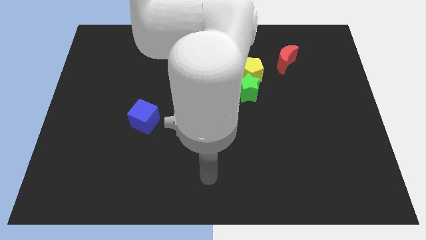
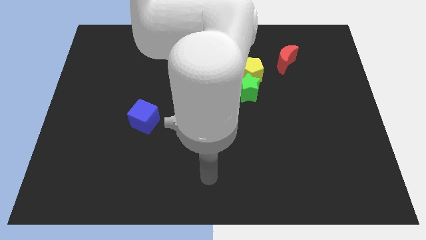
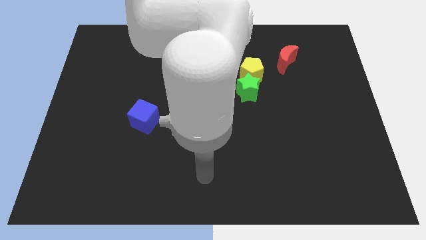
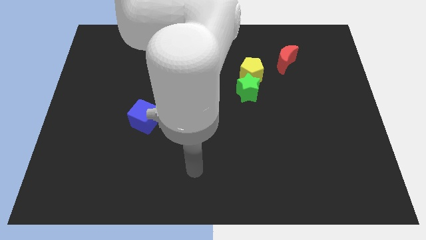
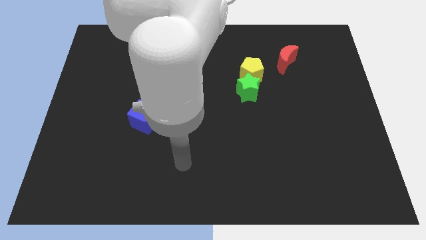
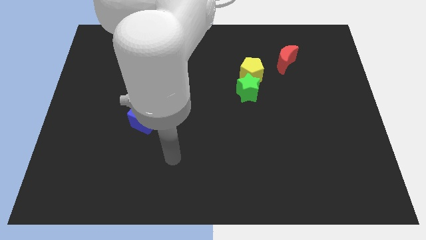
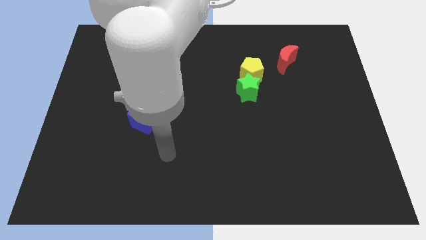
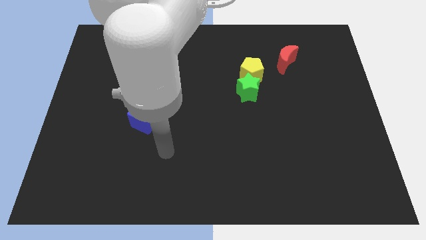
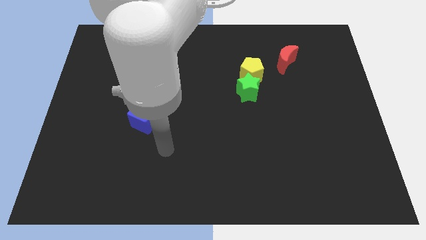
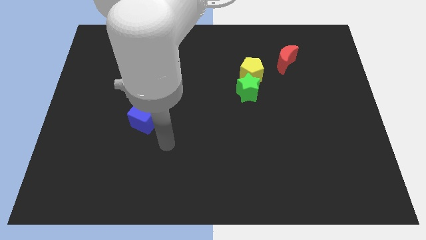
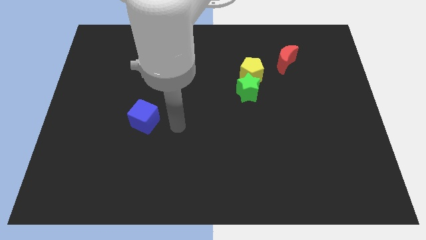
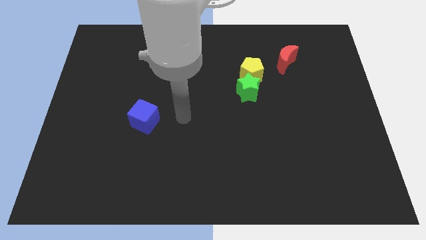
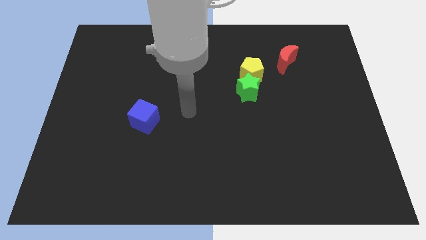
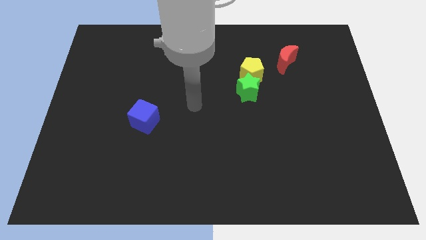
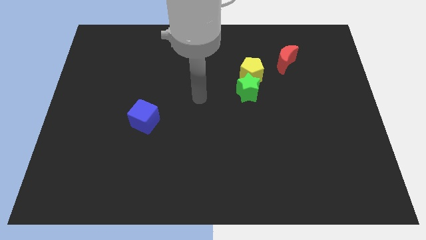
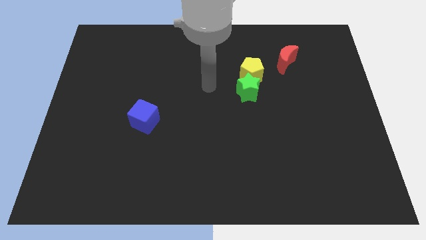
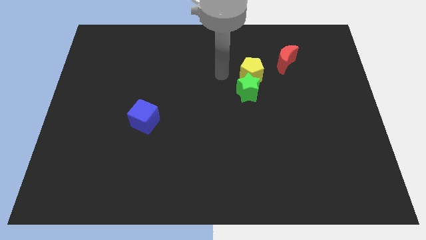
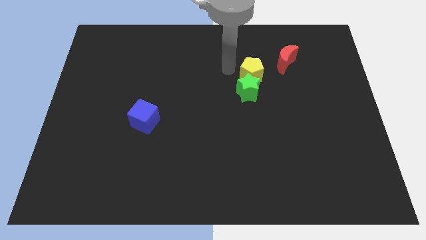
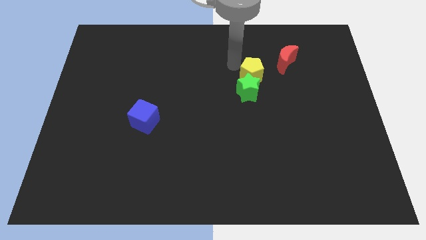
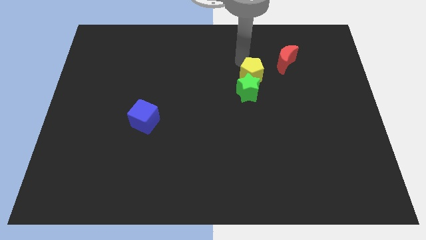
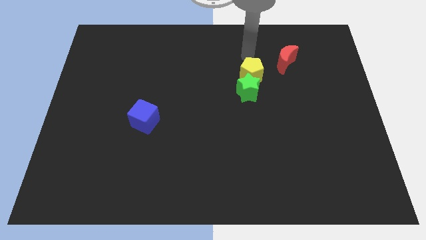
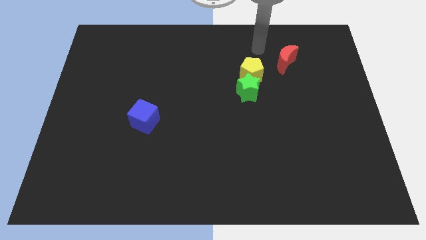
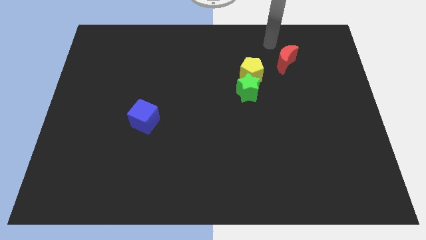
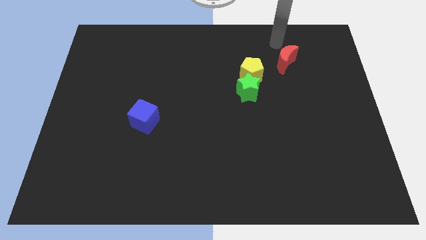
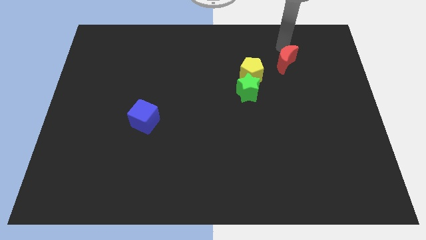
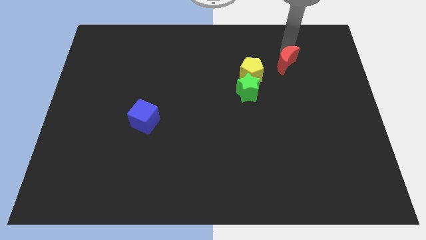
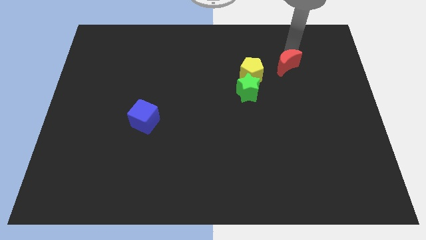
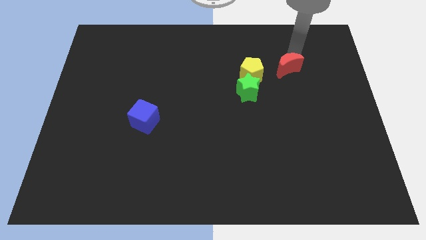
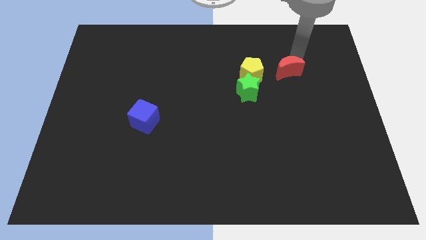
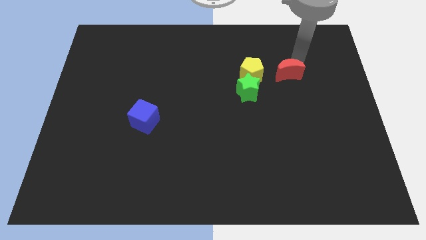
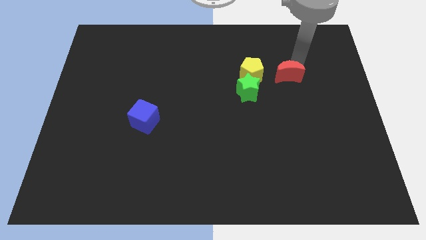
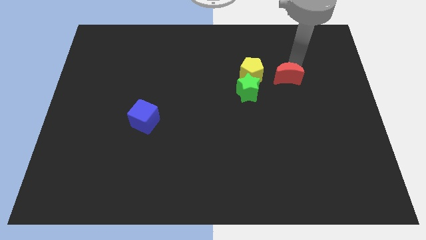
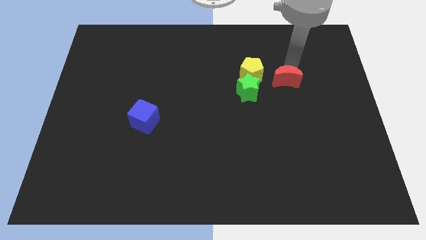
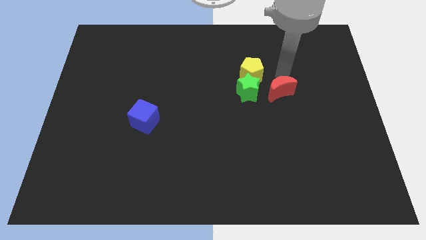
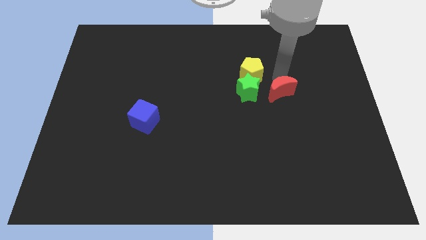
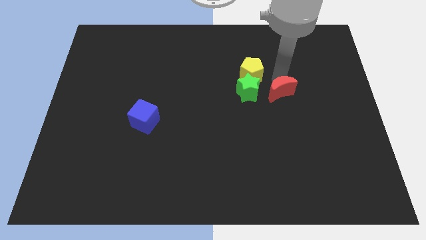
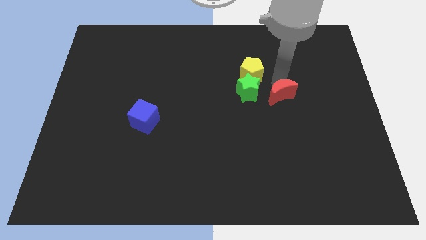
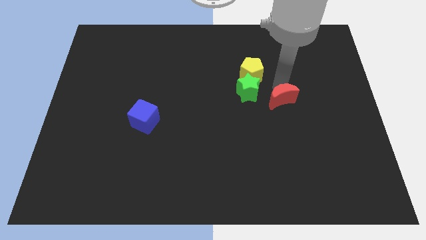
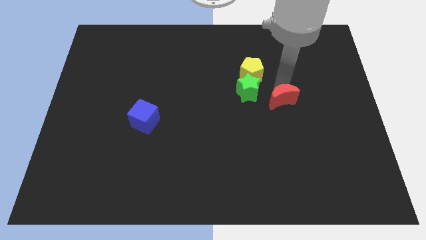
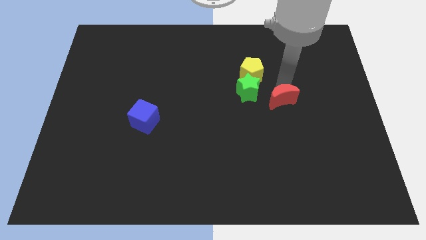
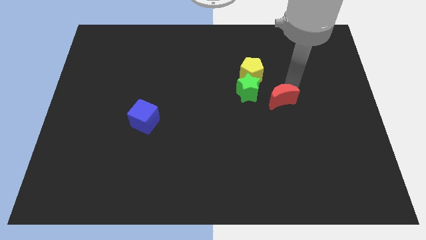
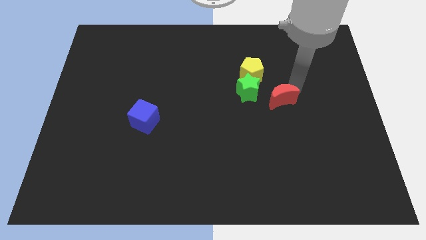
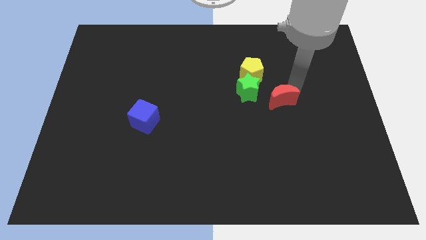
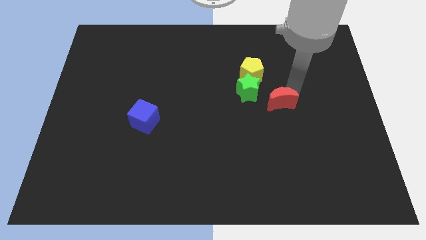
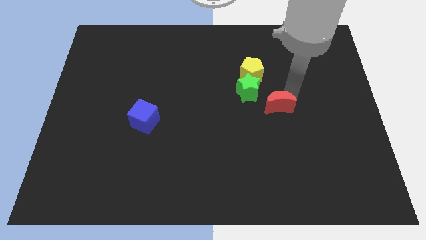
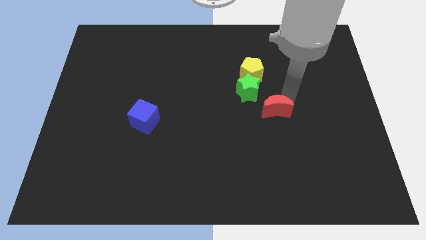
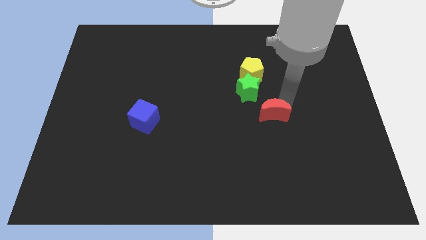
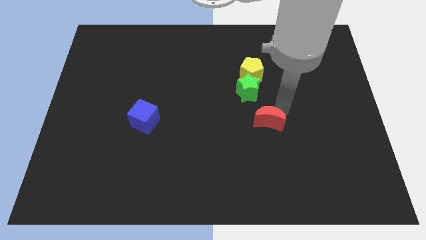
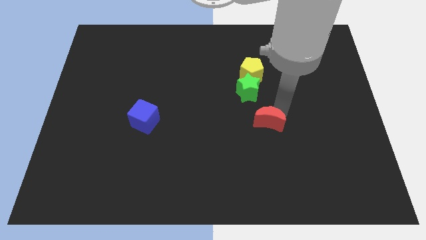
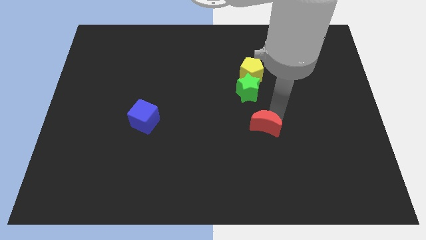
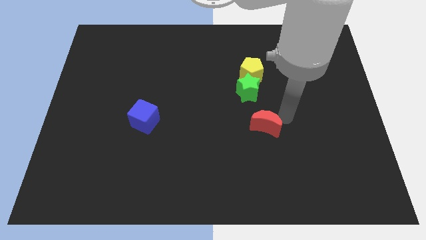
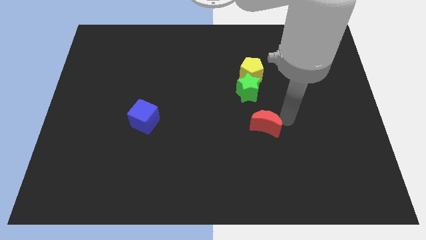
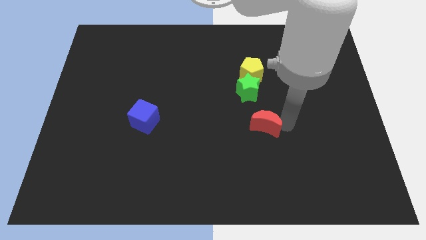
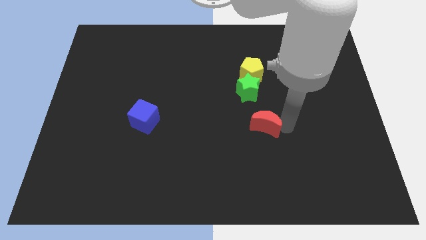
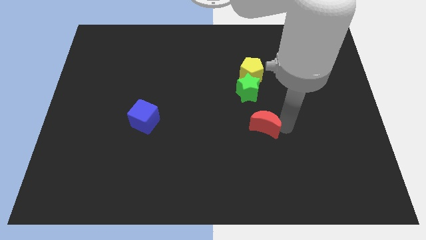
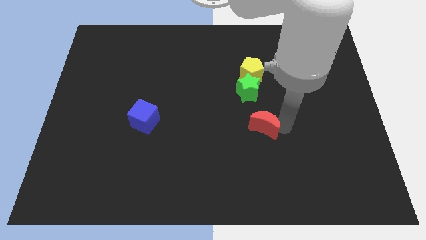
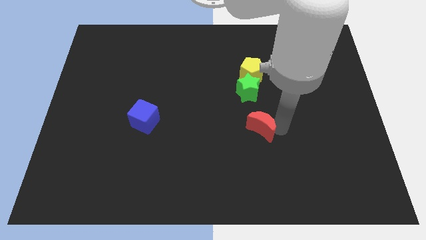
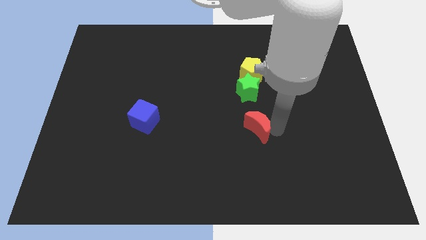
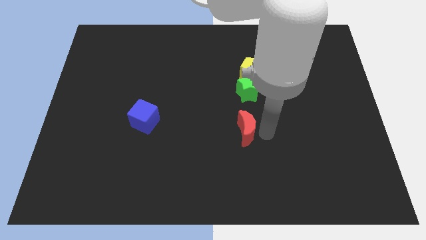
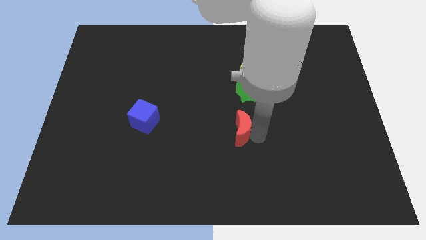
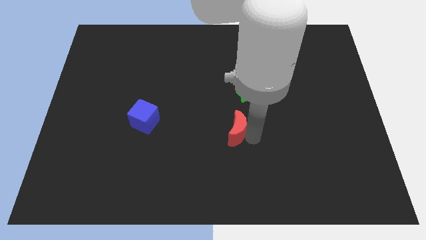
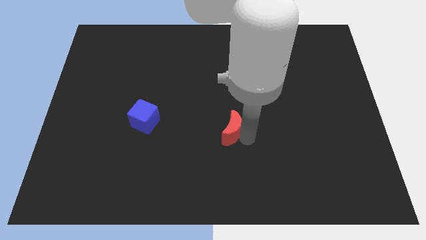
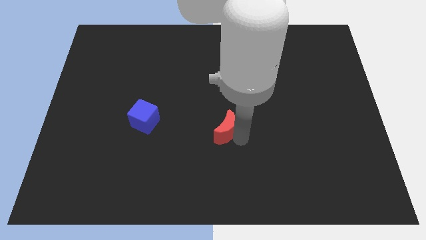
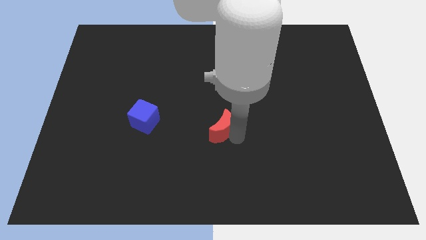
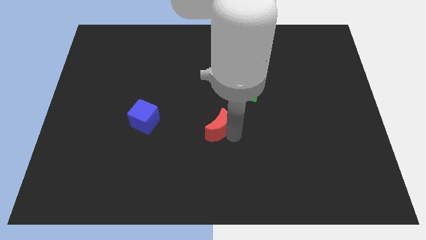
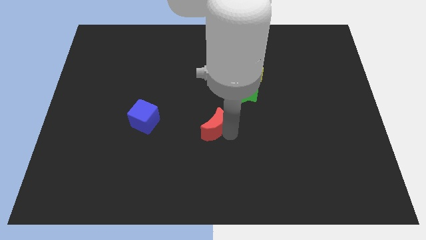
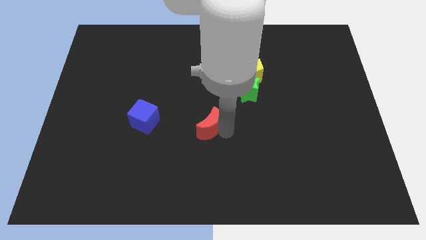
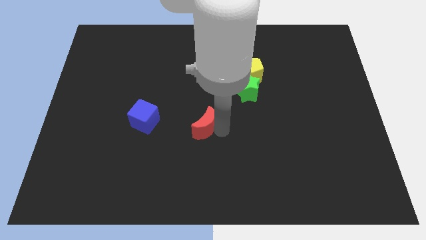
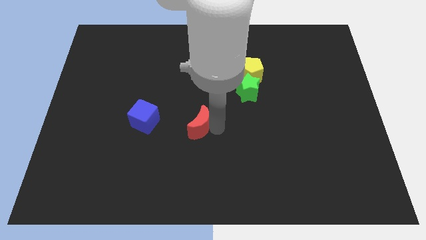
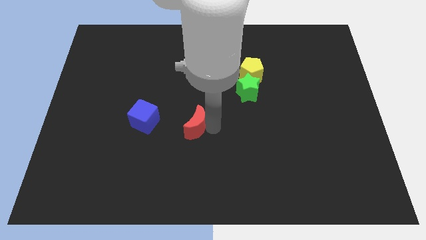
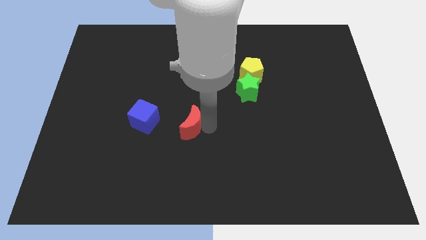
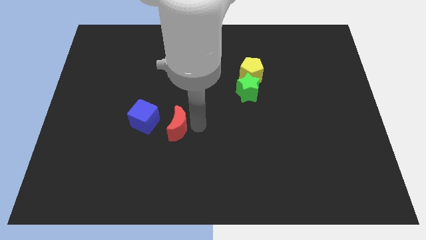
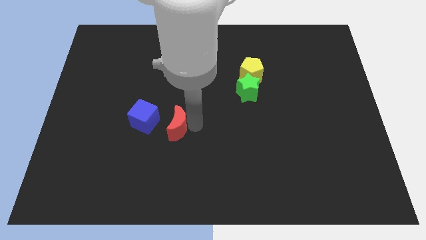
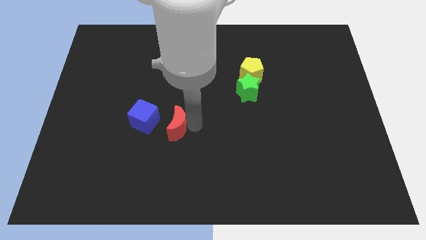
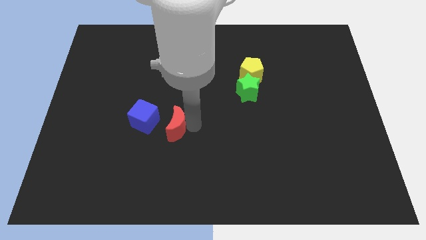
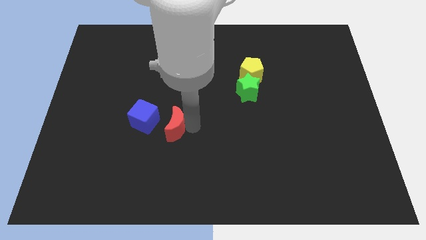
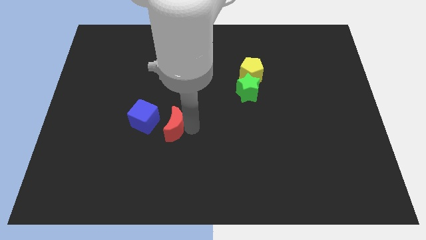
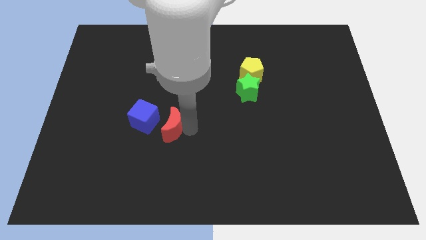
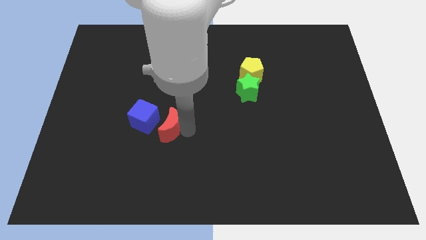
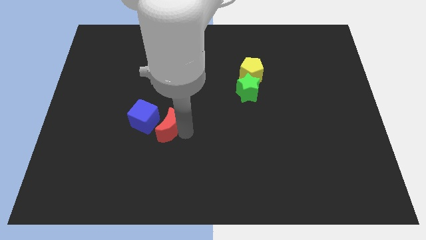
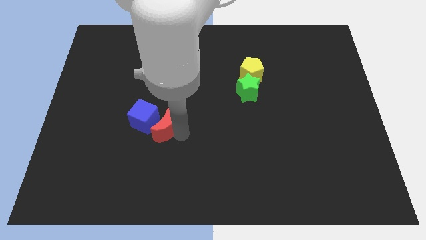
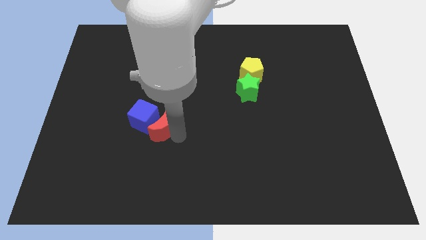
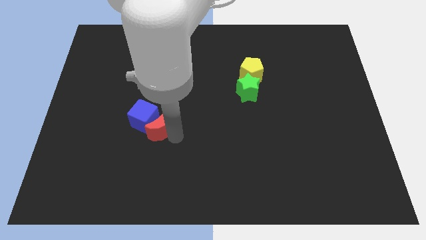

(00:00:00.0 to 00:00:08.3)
push the red moon towards the cube

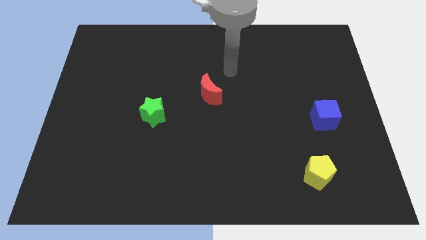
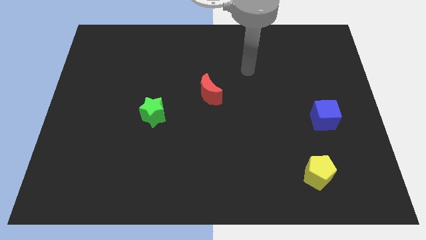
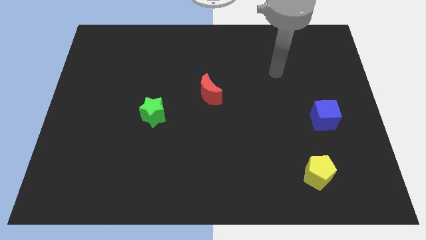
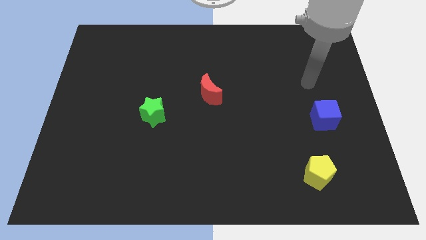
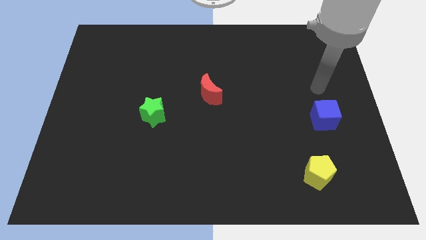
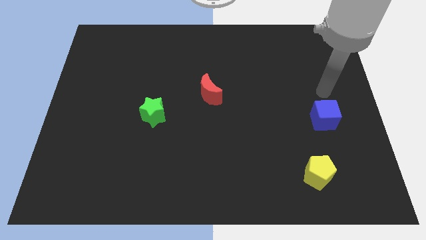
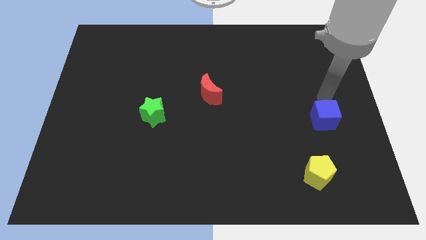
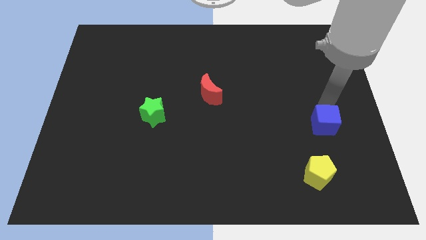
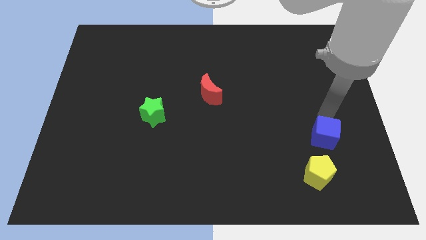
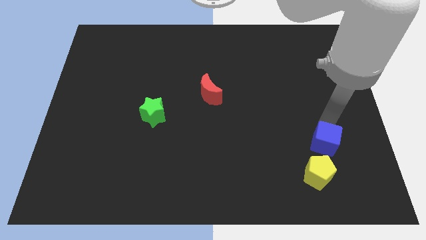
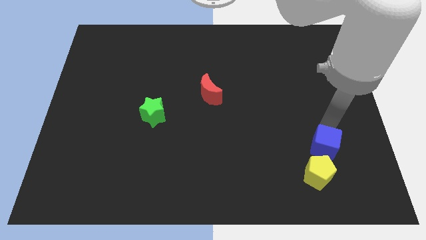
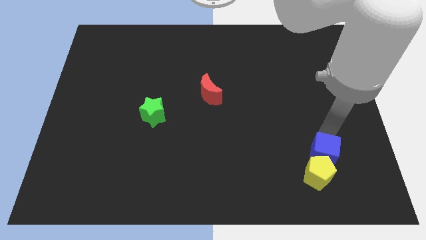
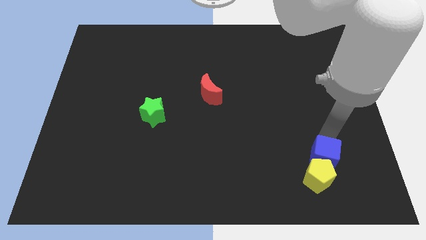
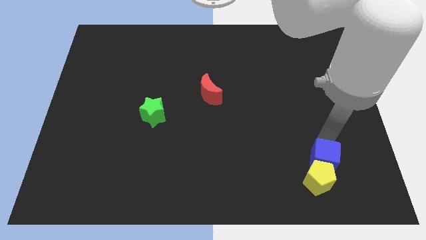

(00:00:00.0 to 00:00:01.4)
put the blue cube towards the pentagon
